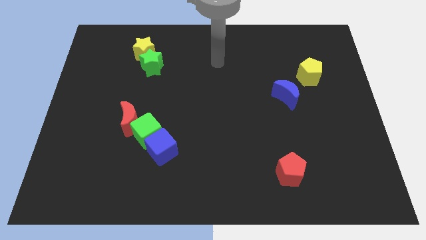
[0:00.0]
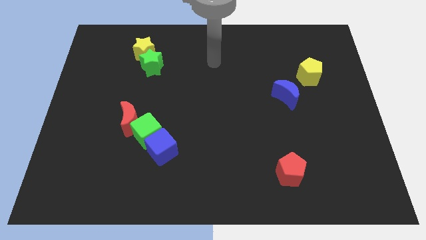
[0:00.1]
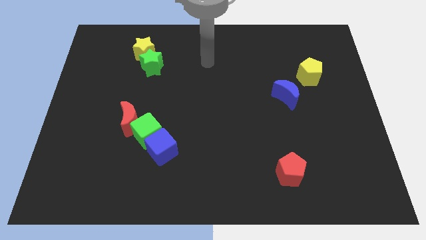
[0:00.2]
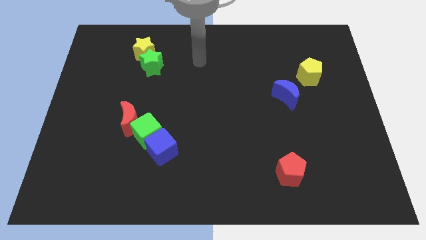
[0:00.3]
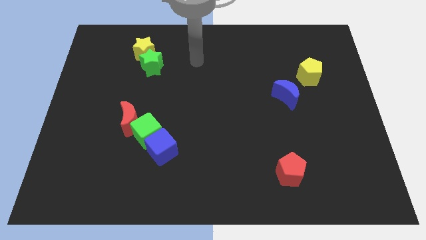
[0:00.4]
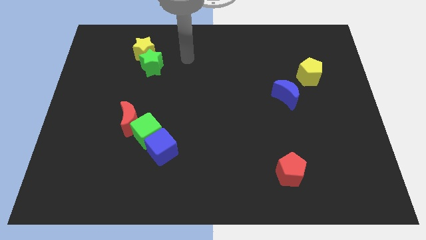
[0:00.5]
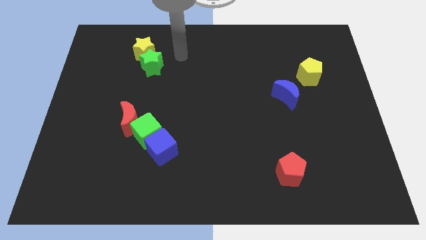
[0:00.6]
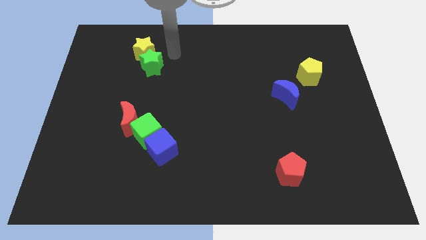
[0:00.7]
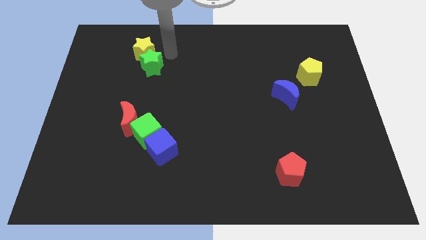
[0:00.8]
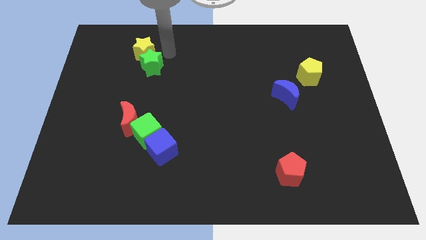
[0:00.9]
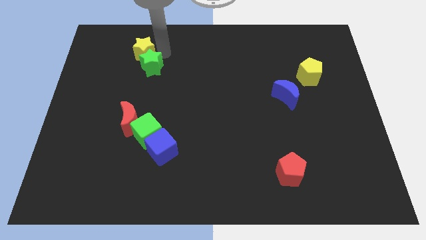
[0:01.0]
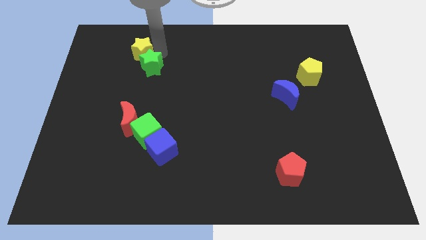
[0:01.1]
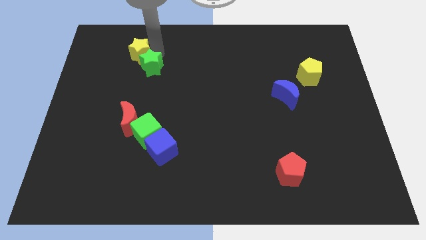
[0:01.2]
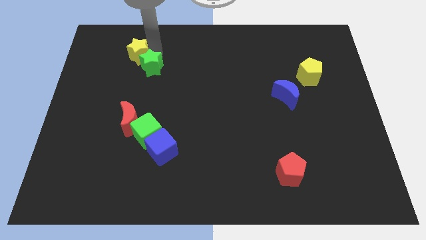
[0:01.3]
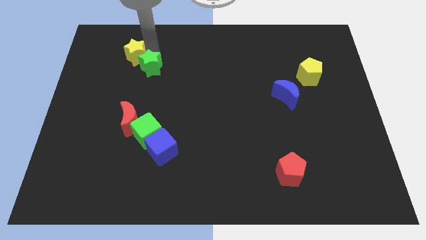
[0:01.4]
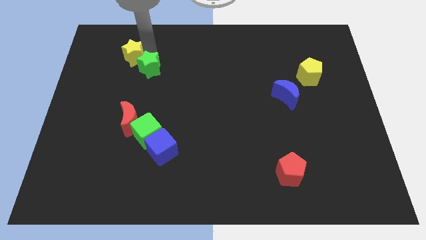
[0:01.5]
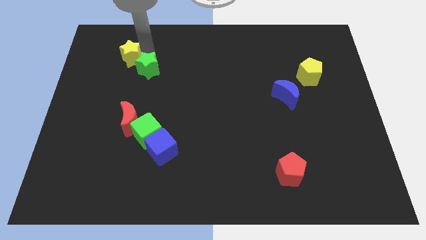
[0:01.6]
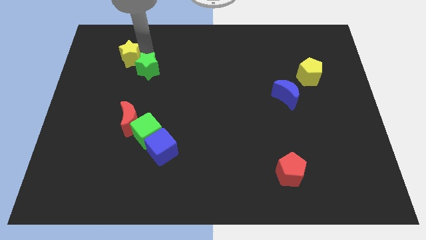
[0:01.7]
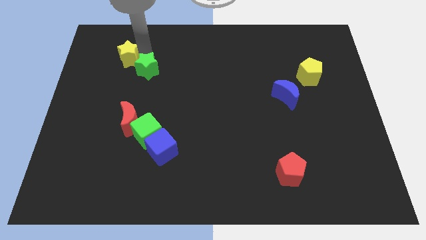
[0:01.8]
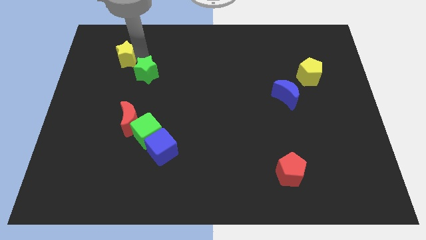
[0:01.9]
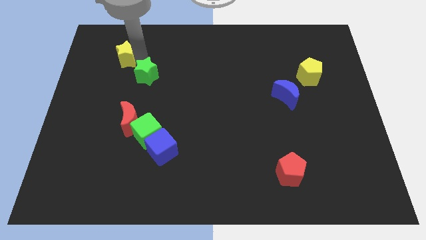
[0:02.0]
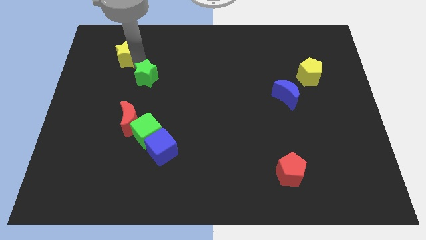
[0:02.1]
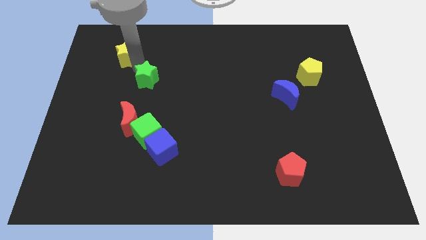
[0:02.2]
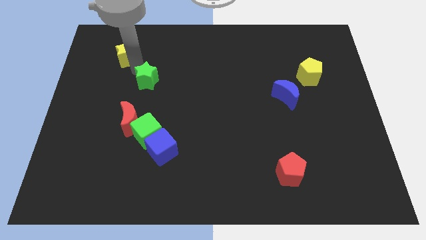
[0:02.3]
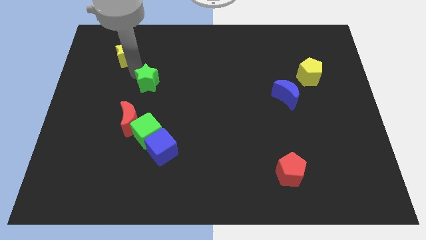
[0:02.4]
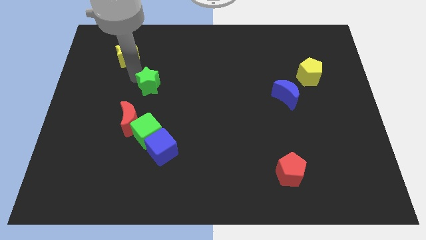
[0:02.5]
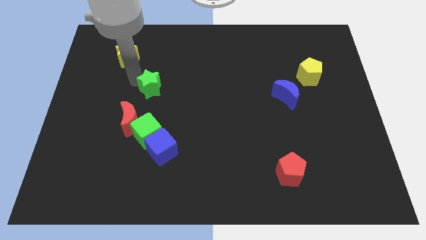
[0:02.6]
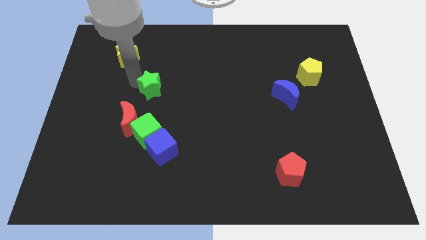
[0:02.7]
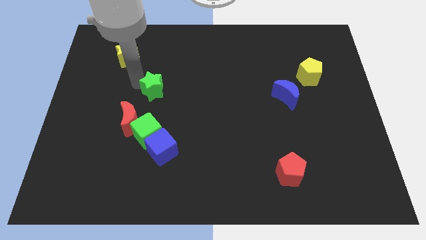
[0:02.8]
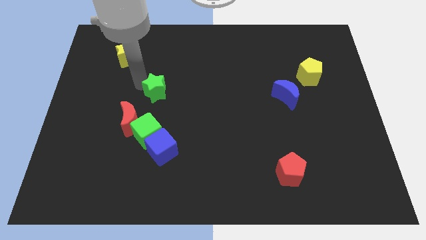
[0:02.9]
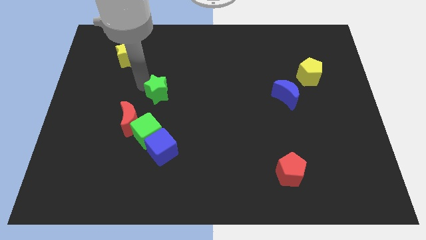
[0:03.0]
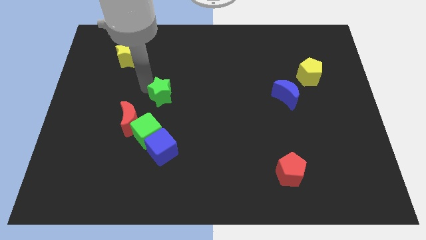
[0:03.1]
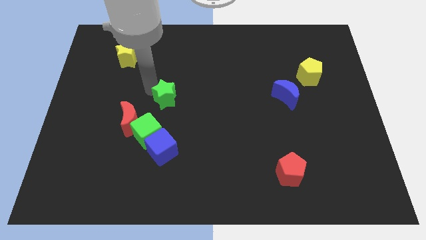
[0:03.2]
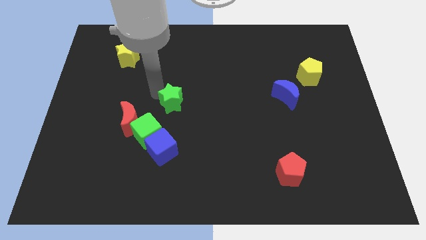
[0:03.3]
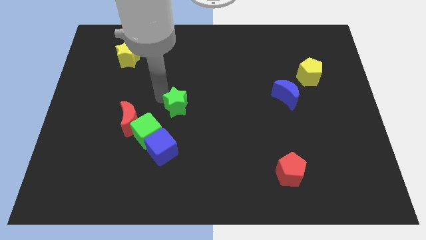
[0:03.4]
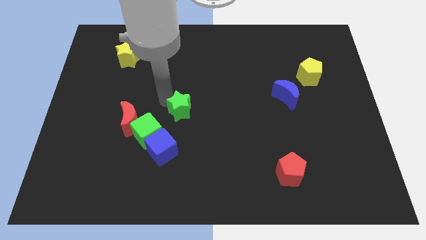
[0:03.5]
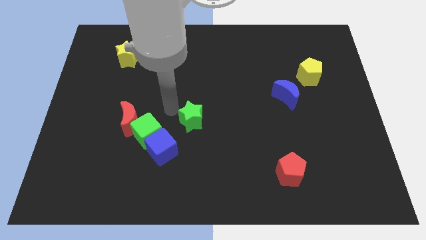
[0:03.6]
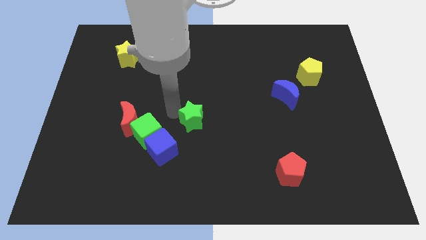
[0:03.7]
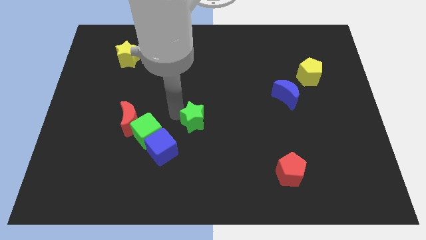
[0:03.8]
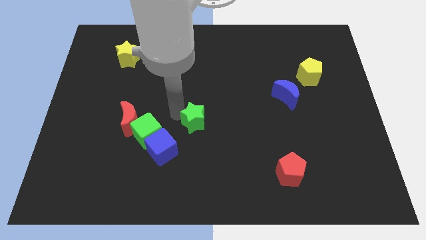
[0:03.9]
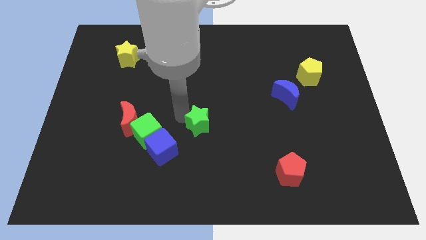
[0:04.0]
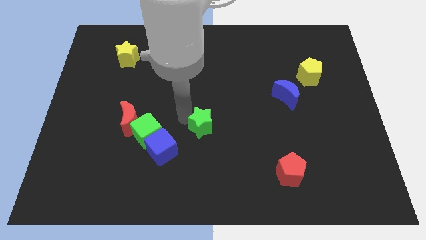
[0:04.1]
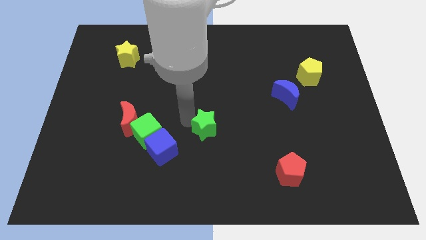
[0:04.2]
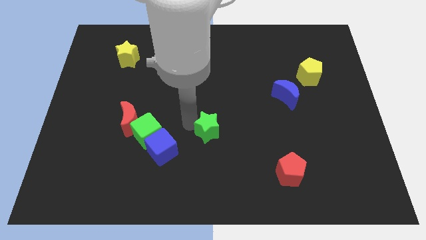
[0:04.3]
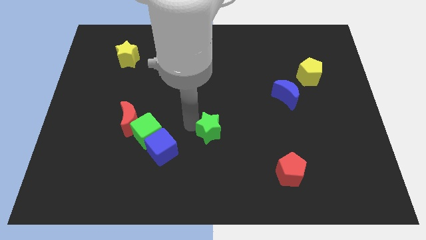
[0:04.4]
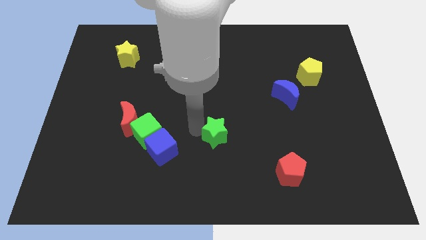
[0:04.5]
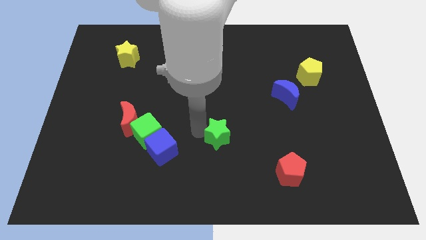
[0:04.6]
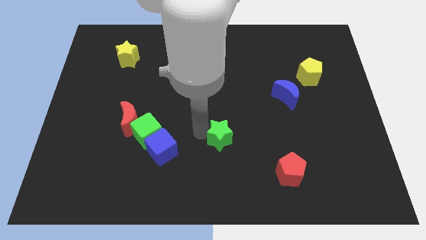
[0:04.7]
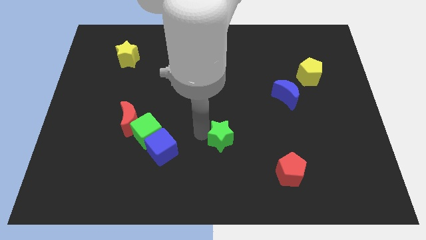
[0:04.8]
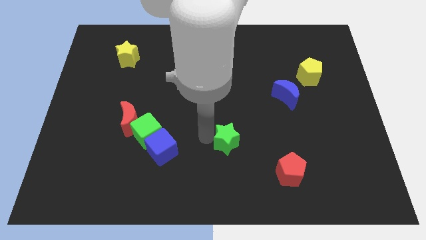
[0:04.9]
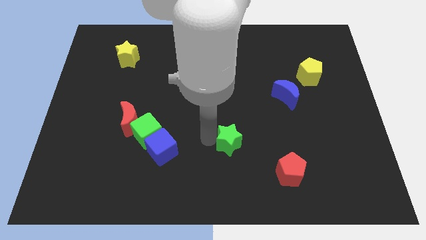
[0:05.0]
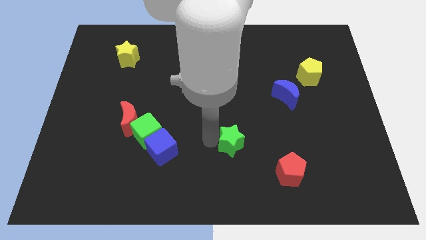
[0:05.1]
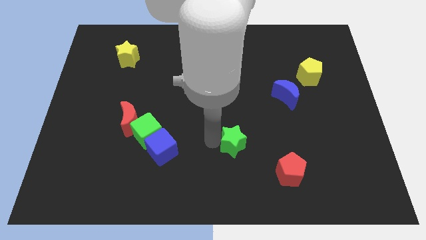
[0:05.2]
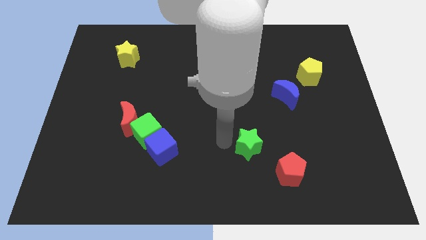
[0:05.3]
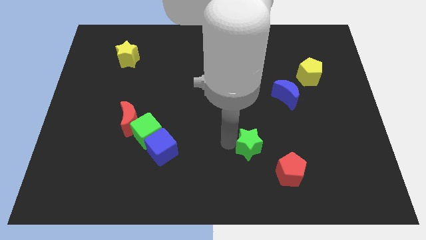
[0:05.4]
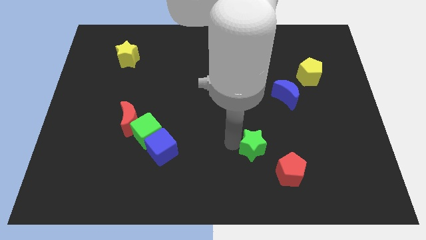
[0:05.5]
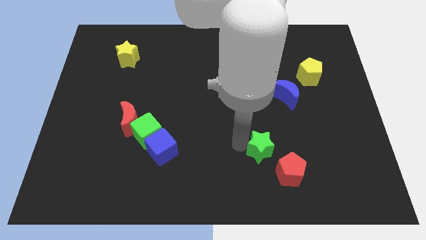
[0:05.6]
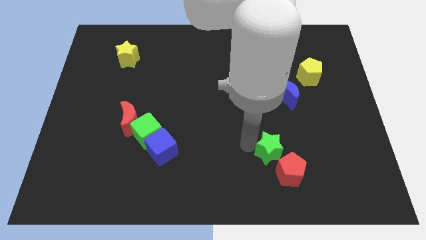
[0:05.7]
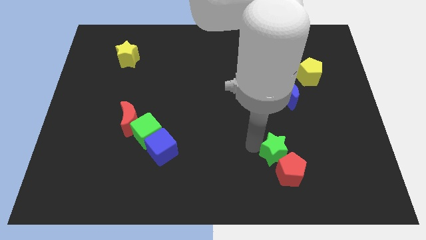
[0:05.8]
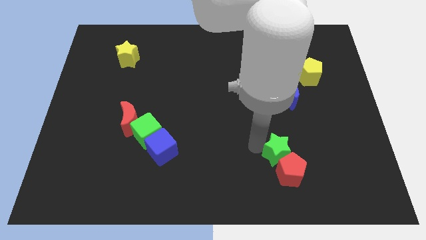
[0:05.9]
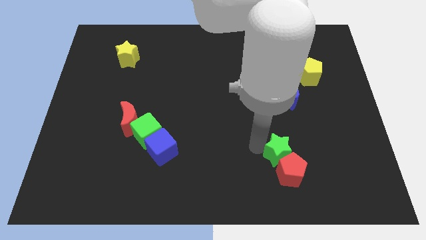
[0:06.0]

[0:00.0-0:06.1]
put the green star to the red pentagon

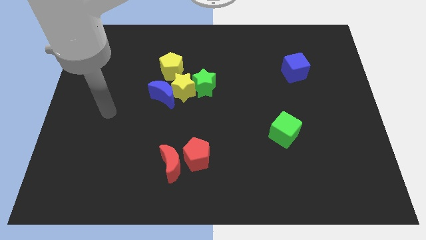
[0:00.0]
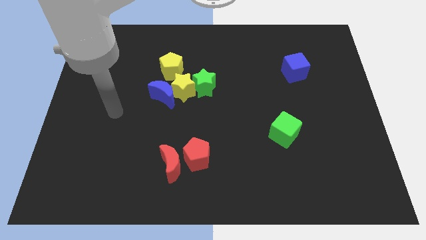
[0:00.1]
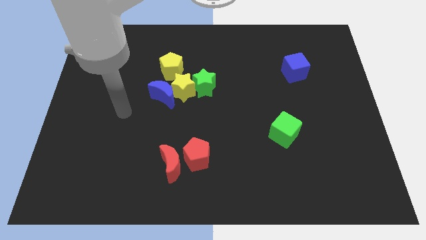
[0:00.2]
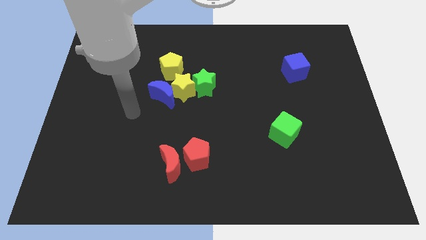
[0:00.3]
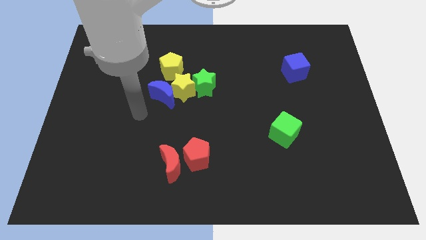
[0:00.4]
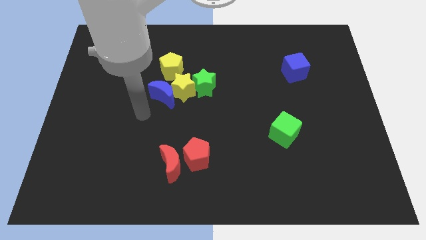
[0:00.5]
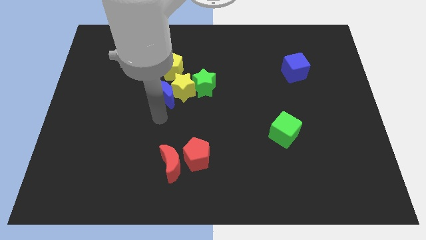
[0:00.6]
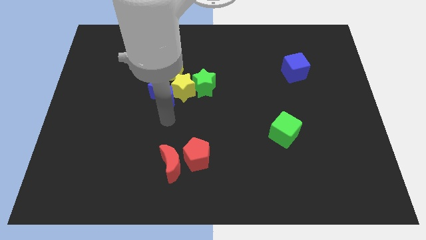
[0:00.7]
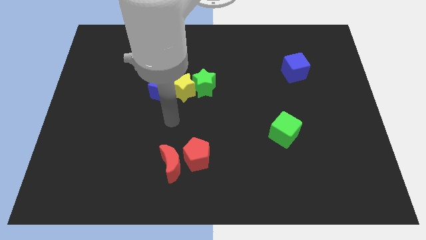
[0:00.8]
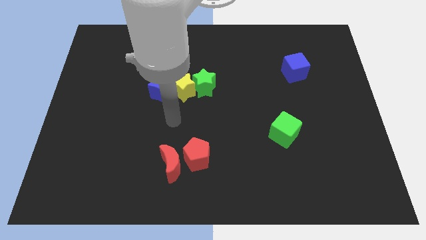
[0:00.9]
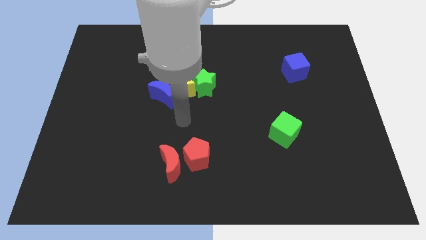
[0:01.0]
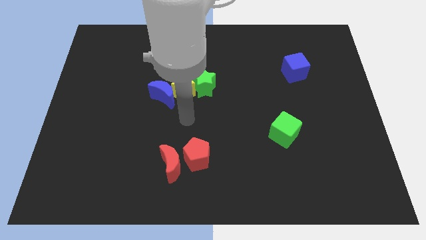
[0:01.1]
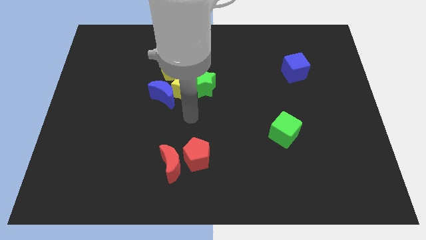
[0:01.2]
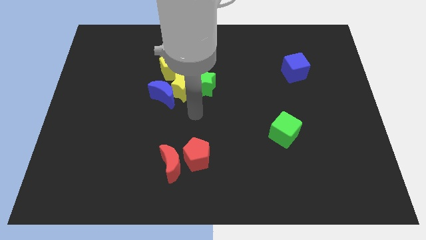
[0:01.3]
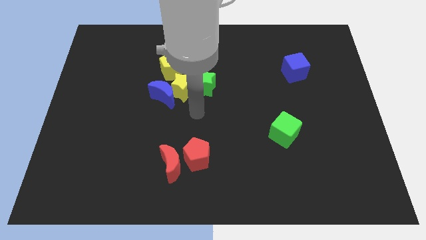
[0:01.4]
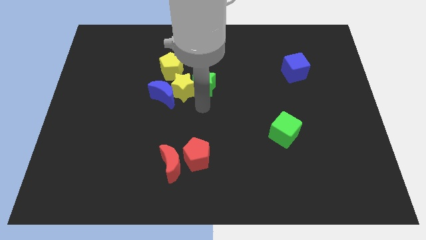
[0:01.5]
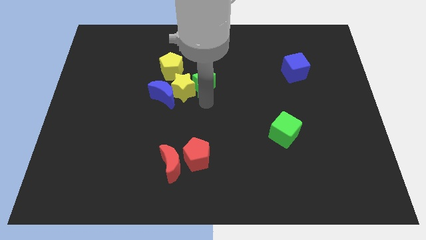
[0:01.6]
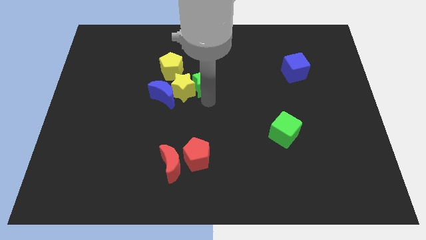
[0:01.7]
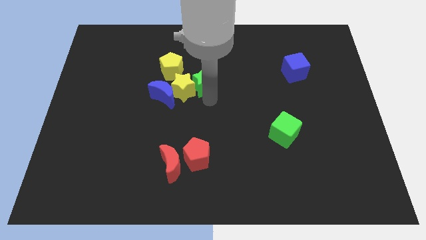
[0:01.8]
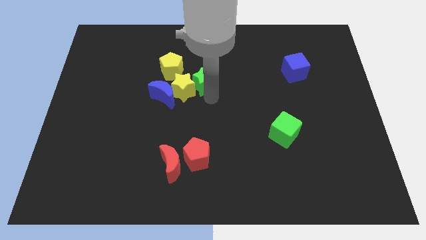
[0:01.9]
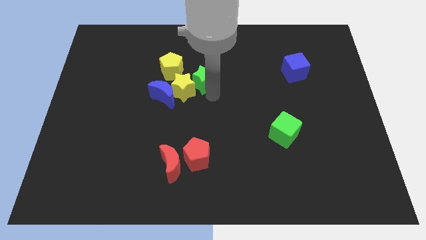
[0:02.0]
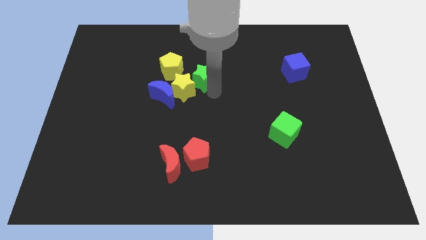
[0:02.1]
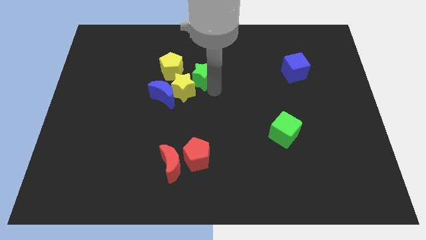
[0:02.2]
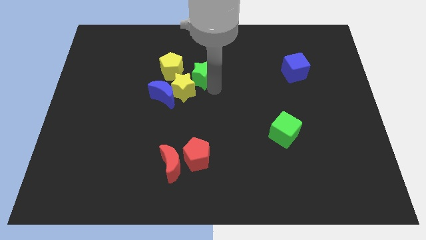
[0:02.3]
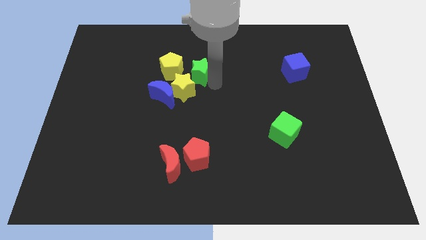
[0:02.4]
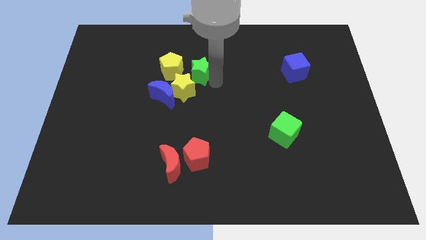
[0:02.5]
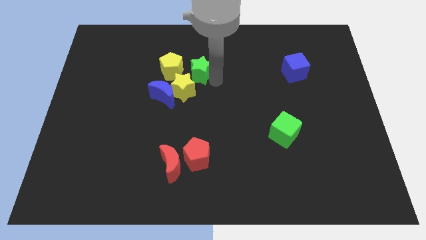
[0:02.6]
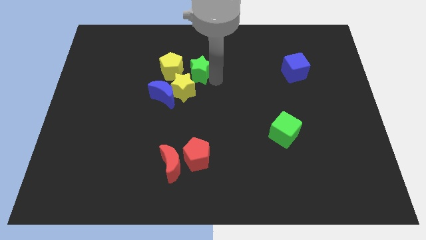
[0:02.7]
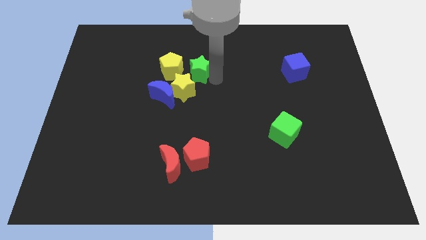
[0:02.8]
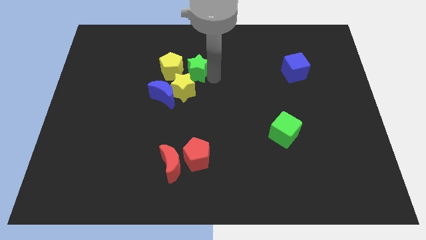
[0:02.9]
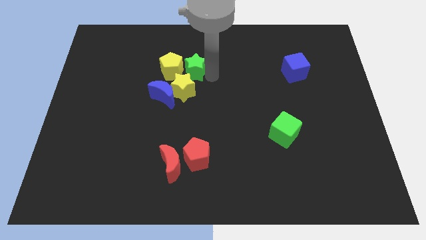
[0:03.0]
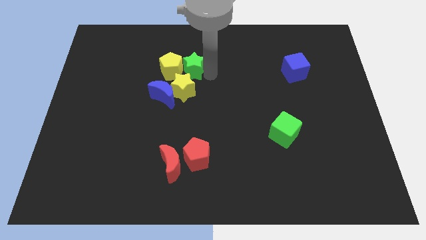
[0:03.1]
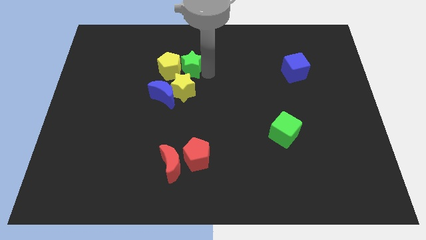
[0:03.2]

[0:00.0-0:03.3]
move the green star towards the yellow pentagon
